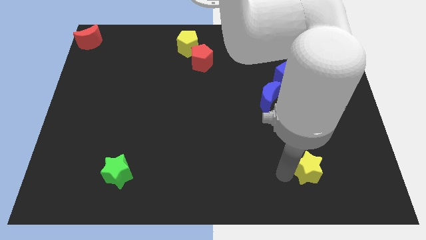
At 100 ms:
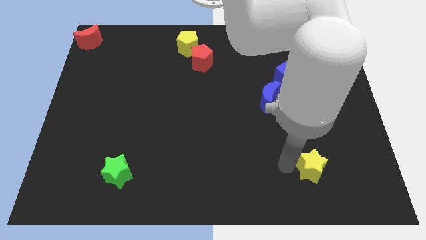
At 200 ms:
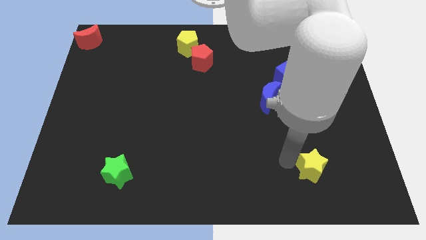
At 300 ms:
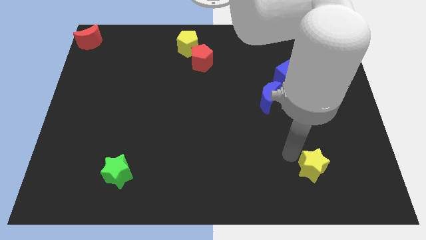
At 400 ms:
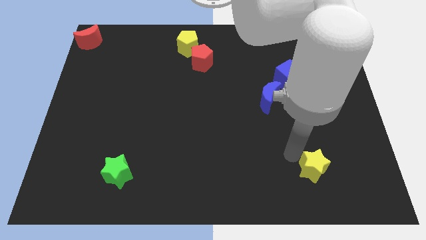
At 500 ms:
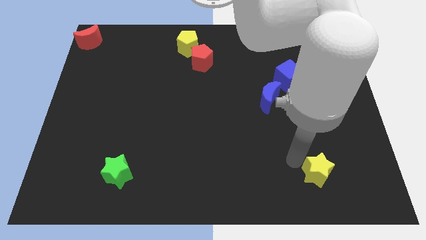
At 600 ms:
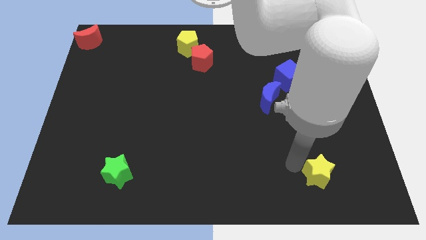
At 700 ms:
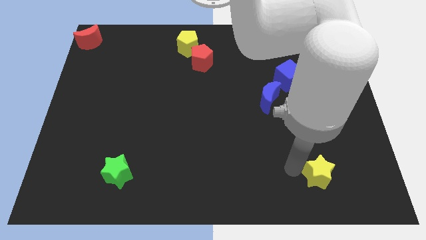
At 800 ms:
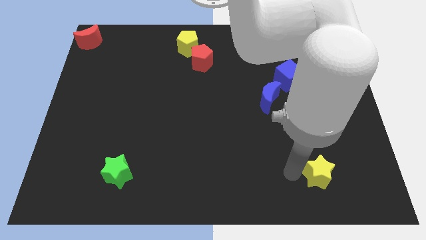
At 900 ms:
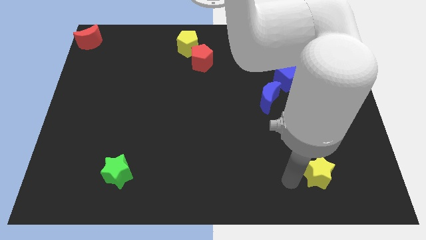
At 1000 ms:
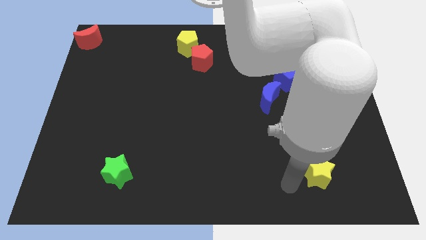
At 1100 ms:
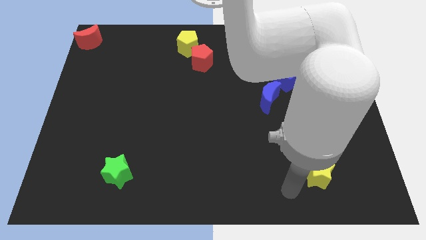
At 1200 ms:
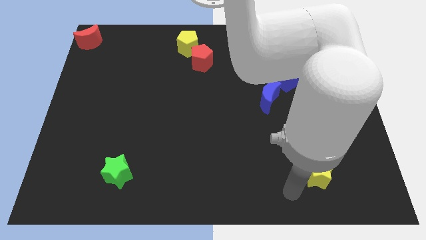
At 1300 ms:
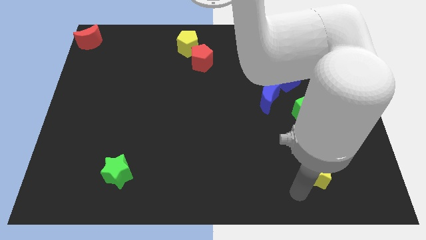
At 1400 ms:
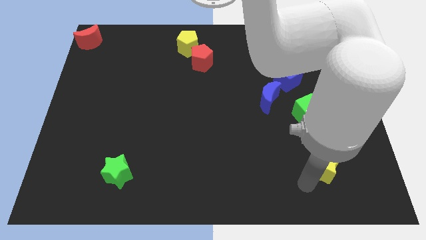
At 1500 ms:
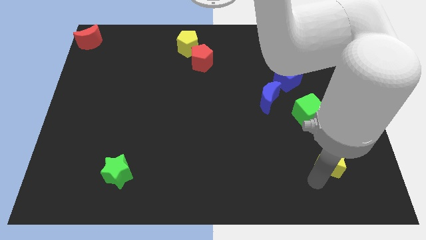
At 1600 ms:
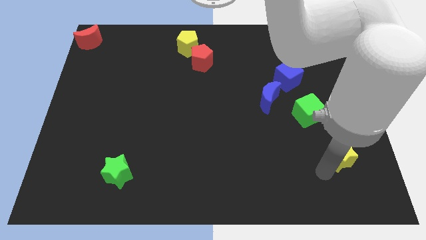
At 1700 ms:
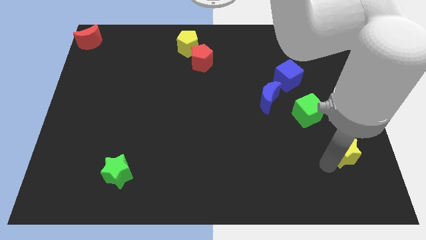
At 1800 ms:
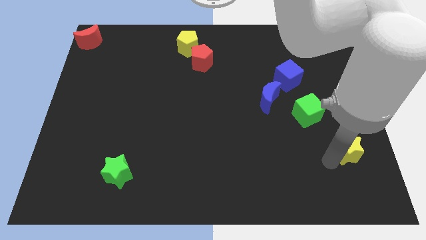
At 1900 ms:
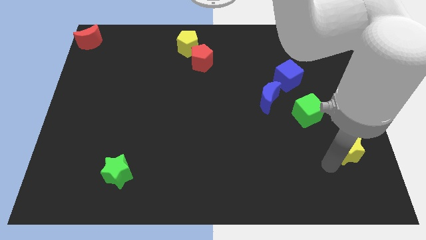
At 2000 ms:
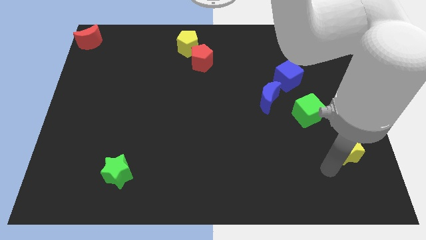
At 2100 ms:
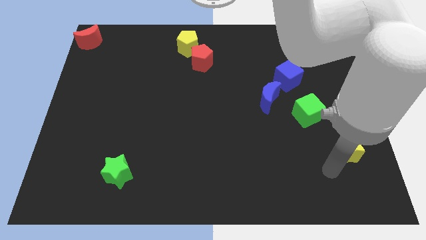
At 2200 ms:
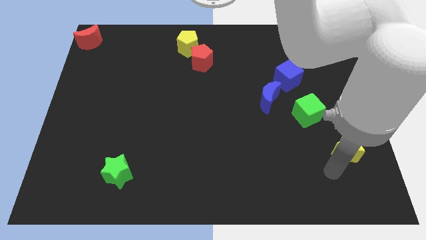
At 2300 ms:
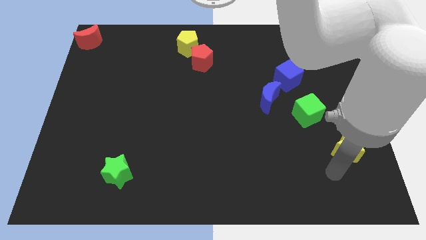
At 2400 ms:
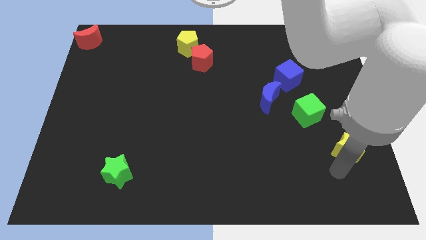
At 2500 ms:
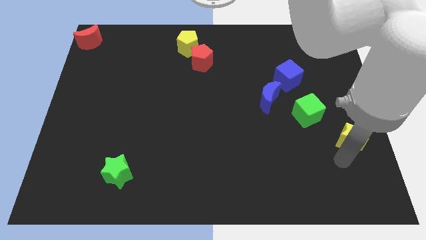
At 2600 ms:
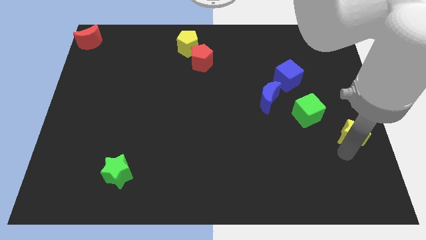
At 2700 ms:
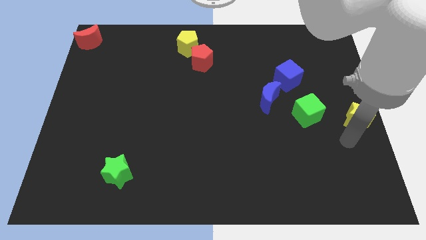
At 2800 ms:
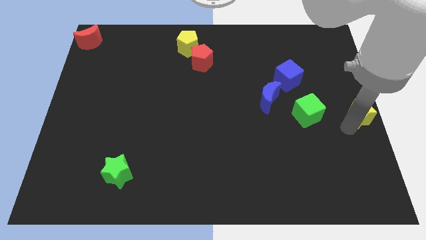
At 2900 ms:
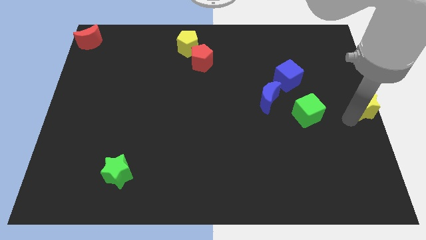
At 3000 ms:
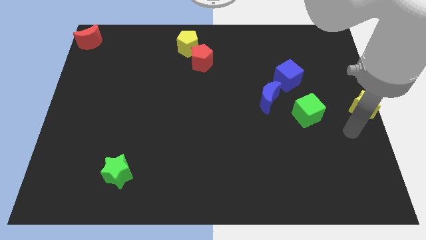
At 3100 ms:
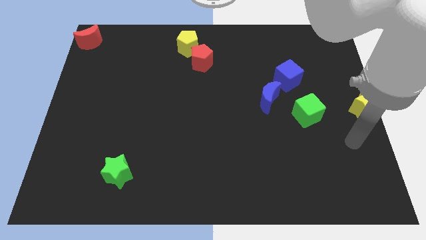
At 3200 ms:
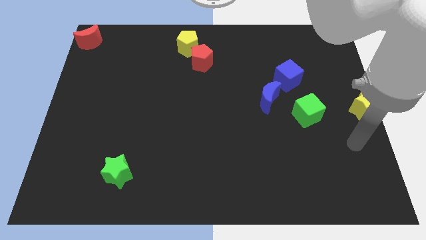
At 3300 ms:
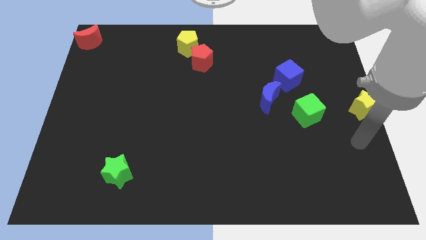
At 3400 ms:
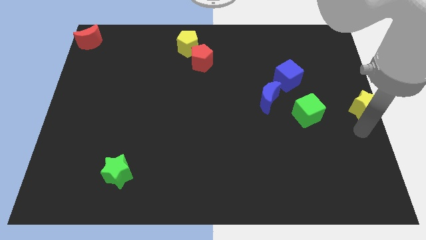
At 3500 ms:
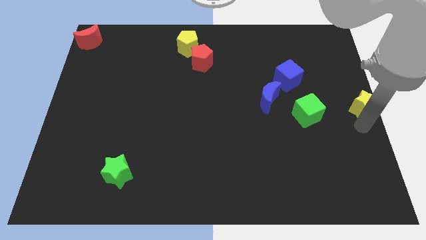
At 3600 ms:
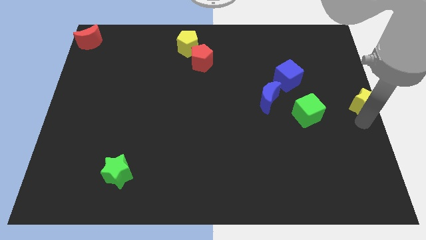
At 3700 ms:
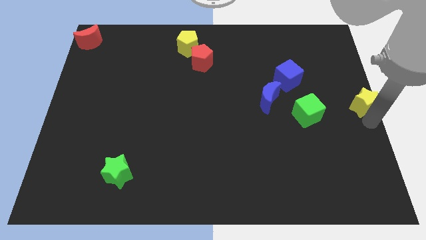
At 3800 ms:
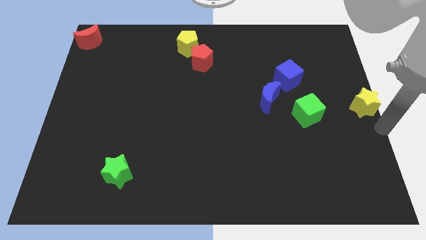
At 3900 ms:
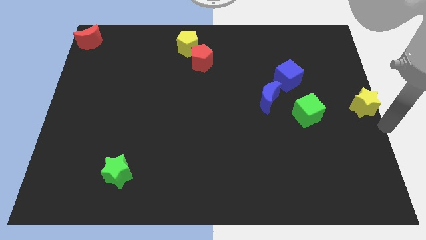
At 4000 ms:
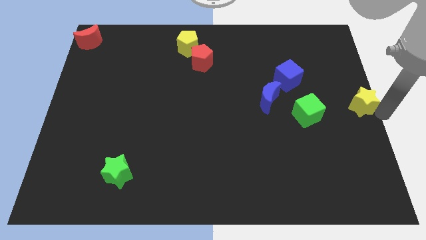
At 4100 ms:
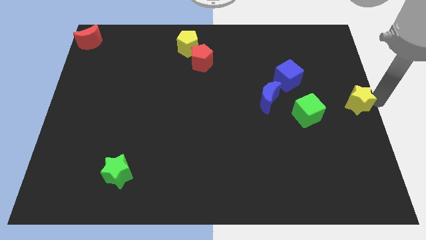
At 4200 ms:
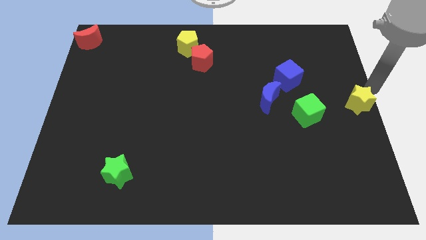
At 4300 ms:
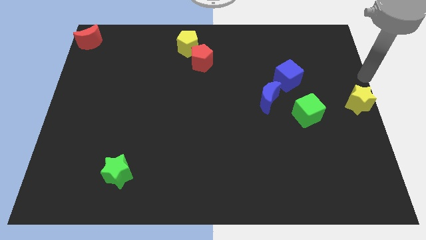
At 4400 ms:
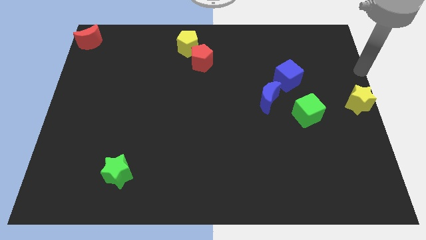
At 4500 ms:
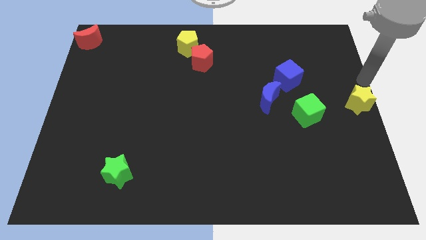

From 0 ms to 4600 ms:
place the yellow star at the center right corner of the board

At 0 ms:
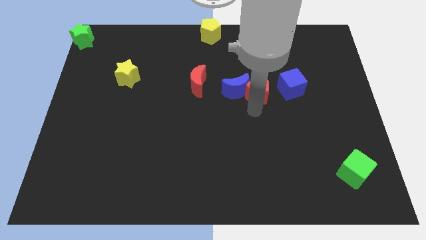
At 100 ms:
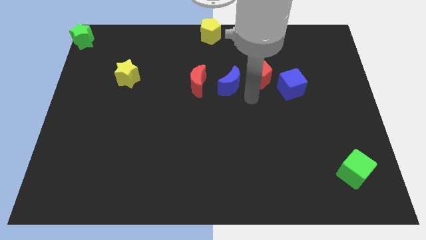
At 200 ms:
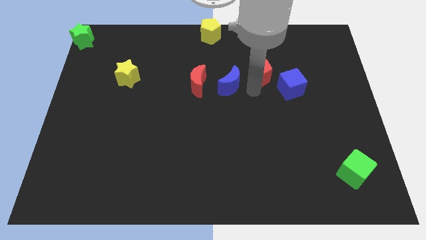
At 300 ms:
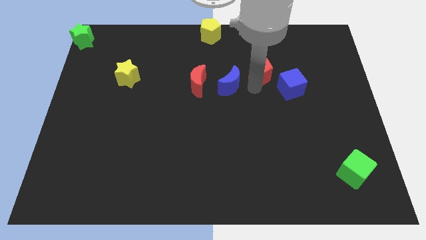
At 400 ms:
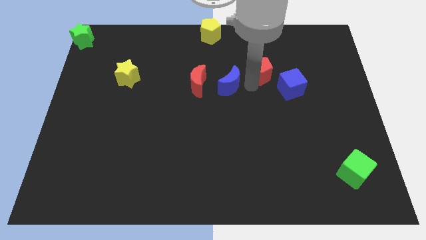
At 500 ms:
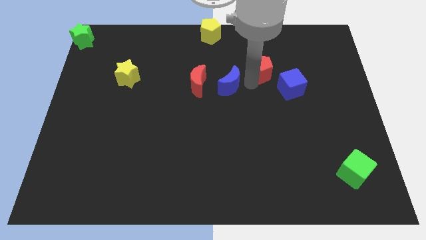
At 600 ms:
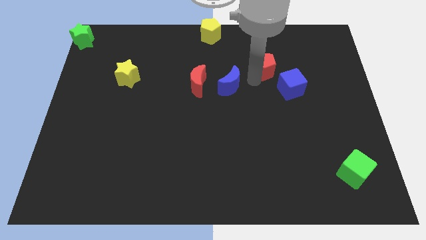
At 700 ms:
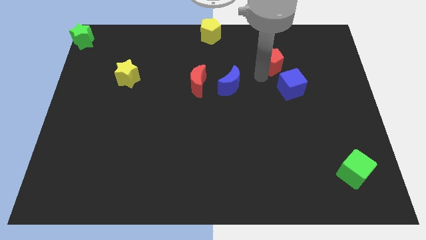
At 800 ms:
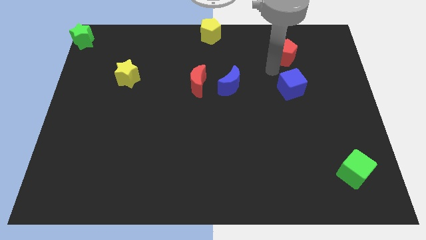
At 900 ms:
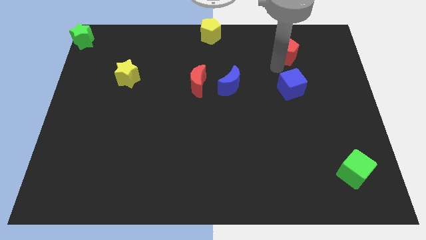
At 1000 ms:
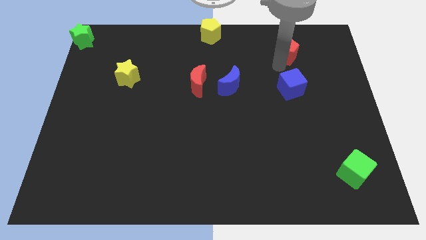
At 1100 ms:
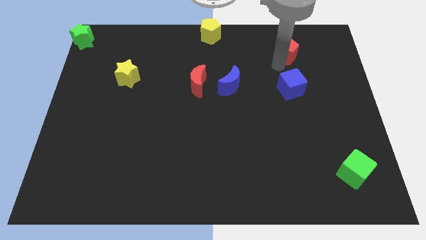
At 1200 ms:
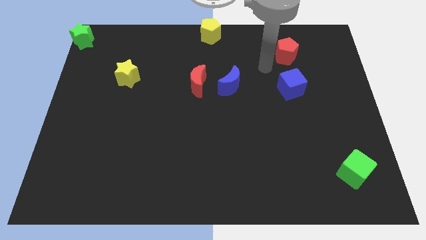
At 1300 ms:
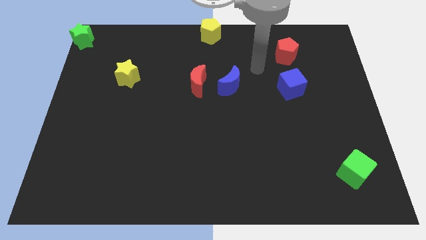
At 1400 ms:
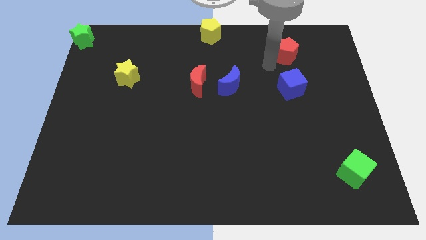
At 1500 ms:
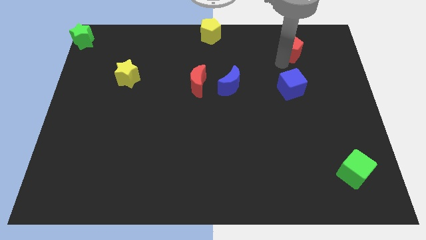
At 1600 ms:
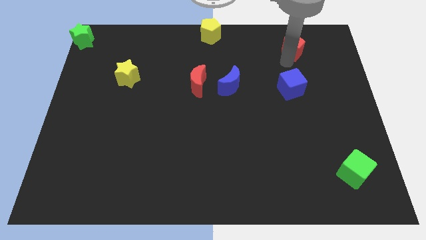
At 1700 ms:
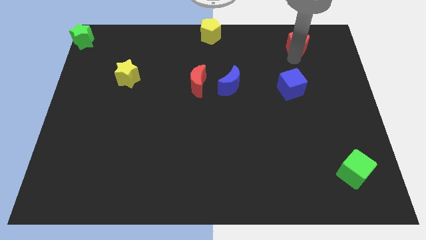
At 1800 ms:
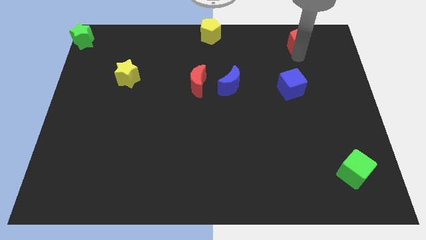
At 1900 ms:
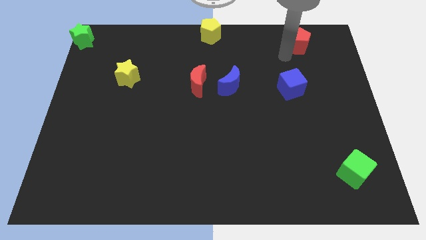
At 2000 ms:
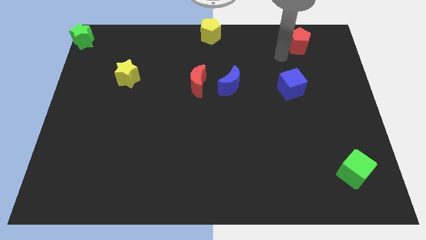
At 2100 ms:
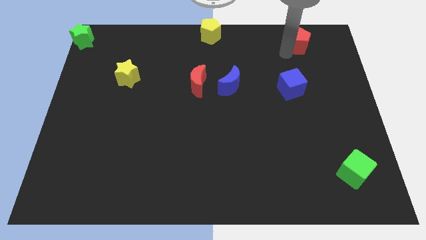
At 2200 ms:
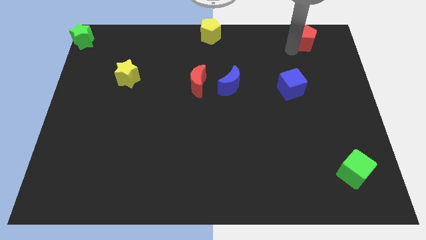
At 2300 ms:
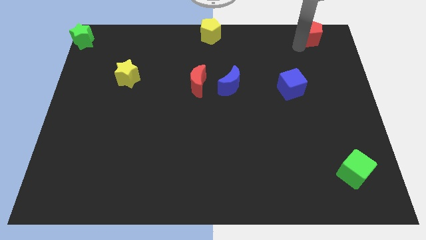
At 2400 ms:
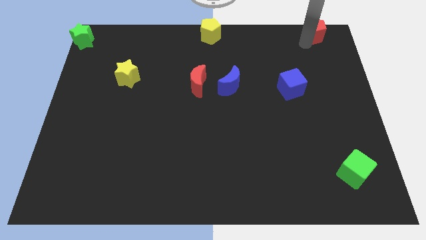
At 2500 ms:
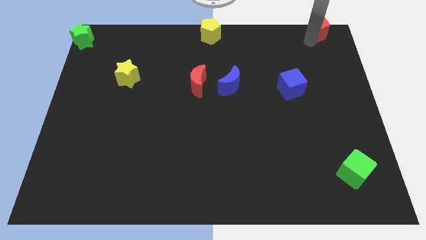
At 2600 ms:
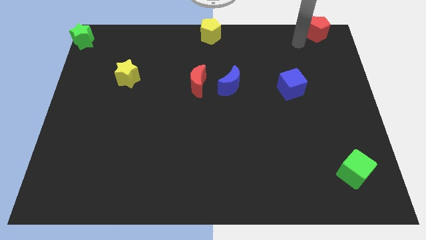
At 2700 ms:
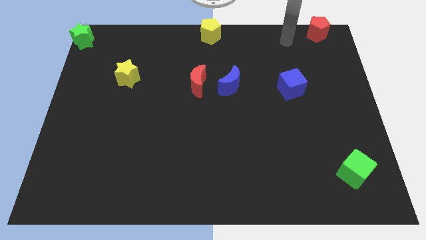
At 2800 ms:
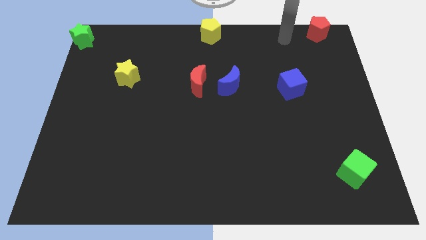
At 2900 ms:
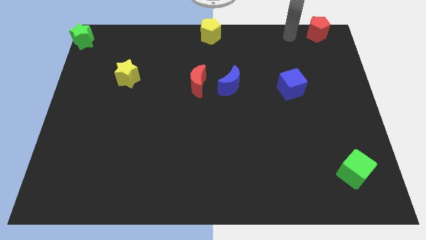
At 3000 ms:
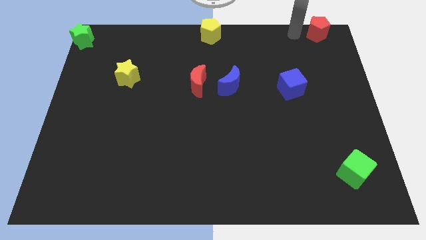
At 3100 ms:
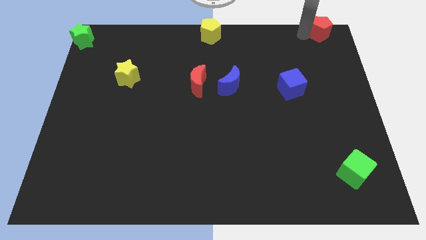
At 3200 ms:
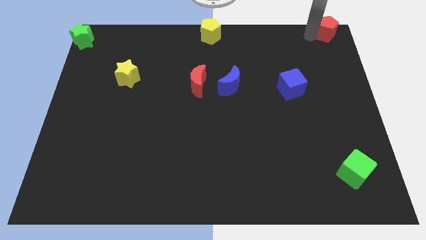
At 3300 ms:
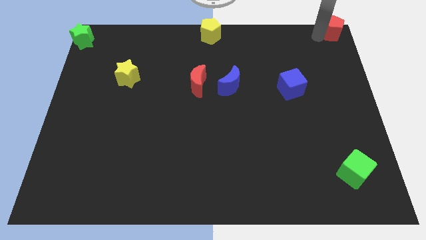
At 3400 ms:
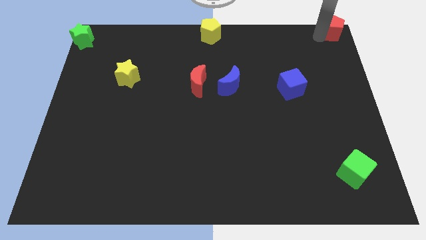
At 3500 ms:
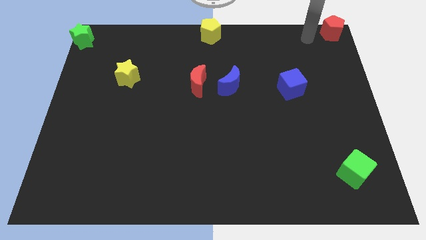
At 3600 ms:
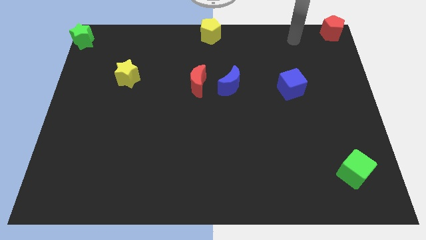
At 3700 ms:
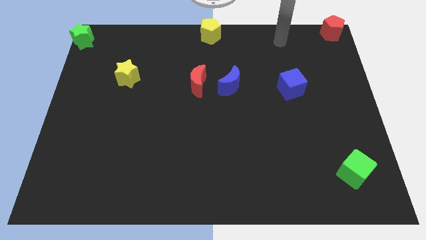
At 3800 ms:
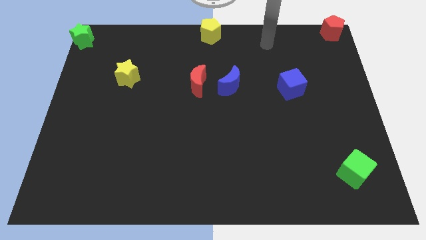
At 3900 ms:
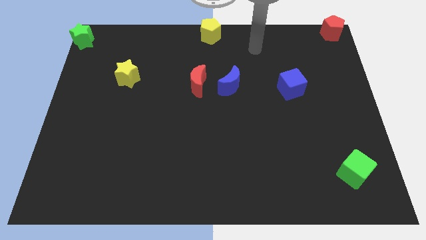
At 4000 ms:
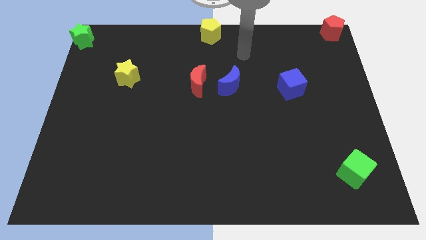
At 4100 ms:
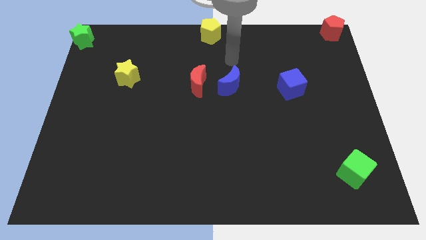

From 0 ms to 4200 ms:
move the red pentagon to the top right corner

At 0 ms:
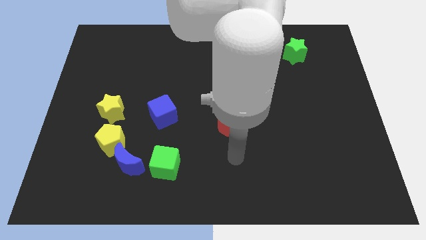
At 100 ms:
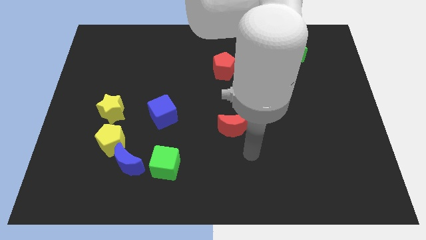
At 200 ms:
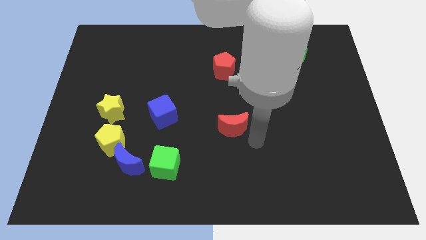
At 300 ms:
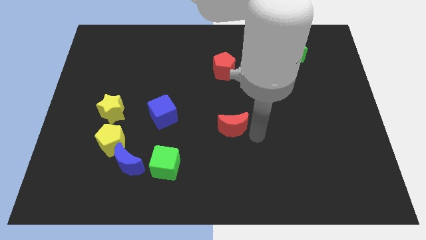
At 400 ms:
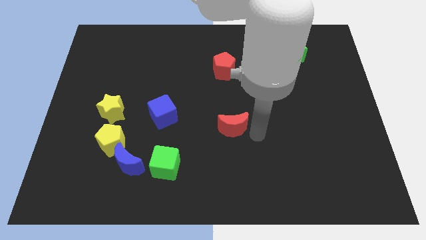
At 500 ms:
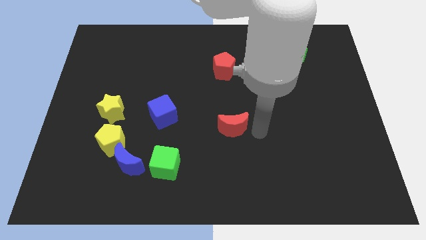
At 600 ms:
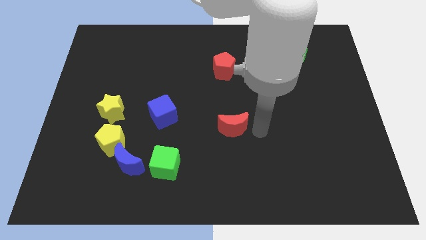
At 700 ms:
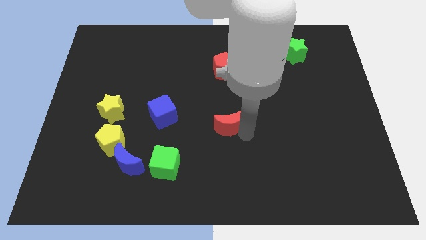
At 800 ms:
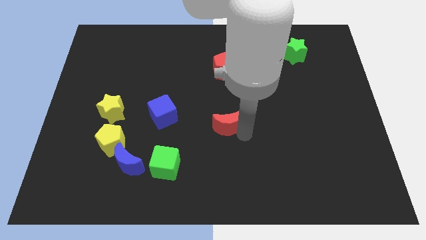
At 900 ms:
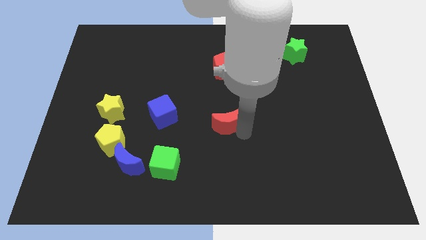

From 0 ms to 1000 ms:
touch the bottom of red moon
